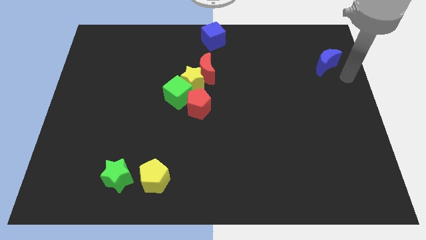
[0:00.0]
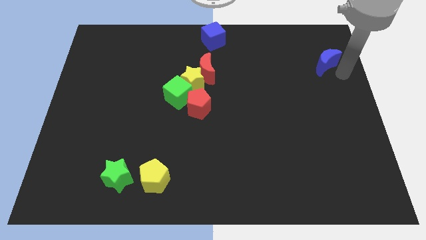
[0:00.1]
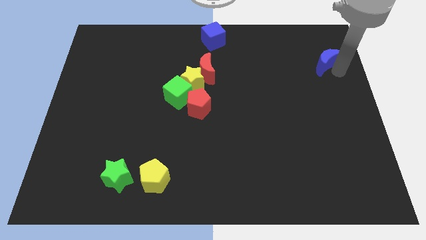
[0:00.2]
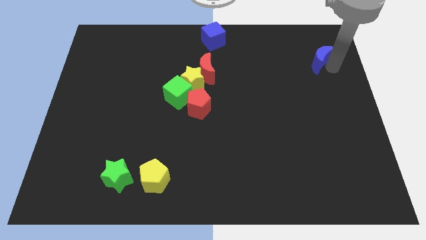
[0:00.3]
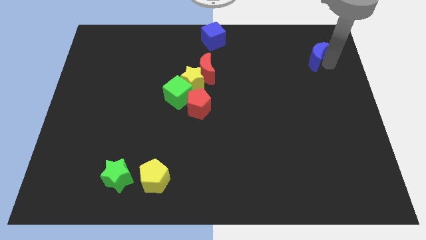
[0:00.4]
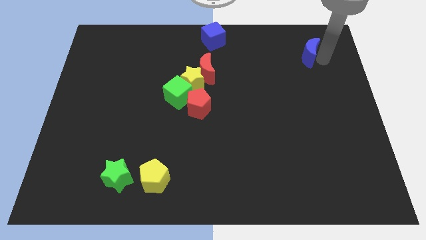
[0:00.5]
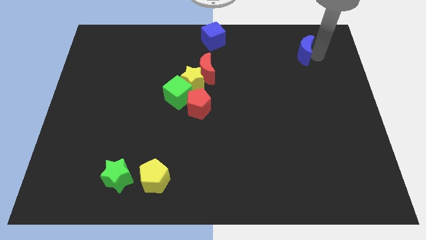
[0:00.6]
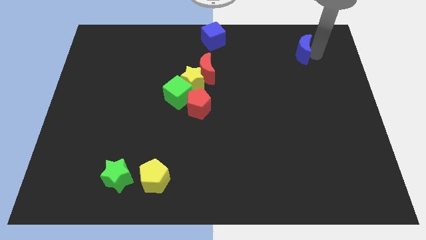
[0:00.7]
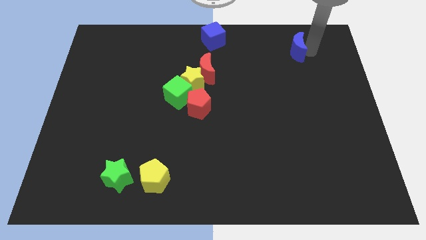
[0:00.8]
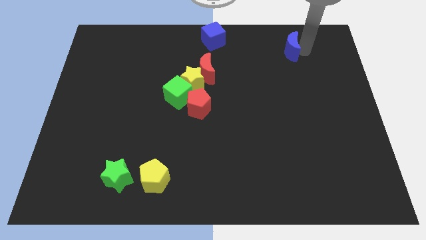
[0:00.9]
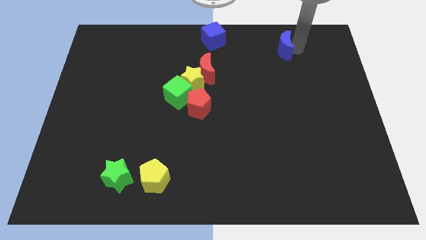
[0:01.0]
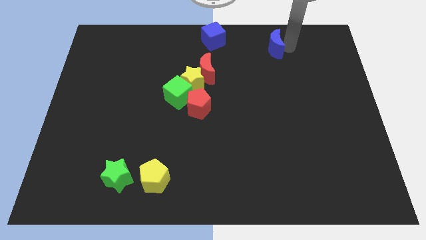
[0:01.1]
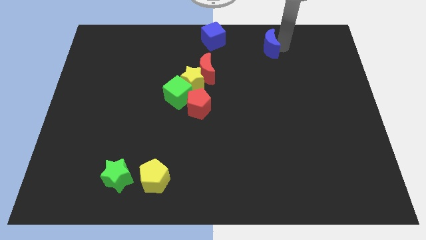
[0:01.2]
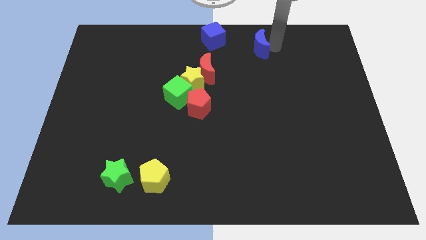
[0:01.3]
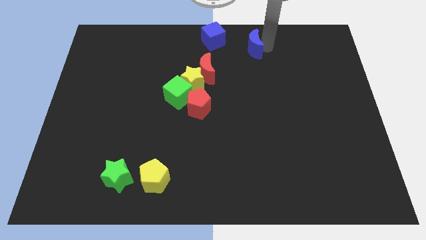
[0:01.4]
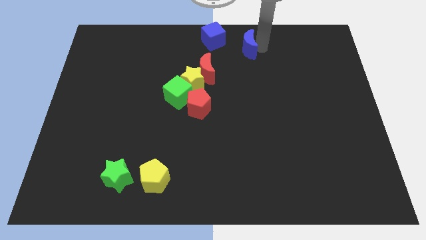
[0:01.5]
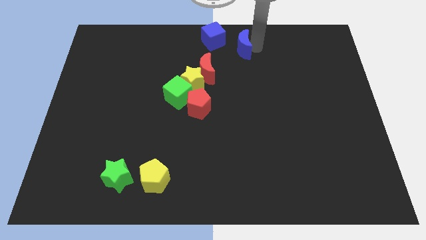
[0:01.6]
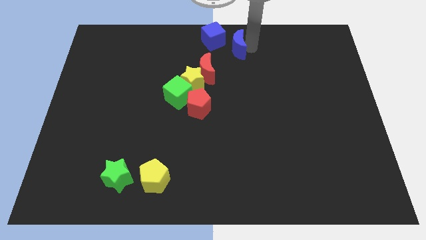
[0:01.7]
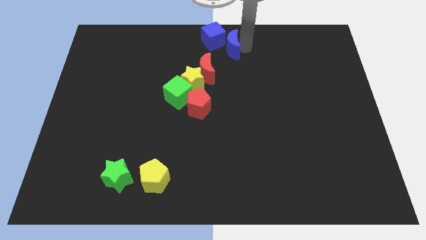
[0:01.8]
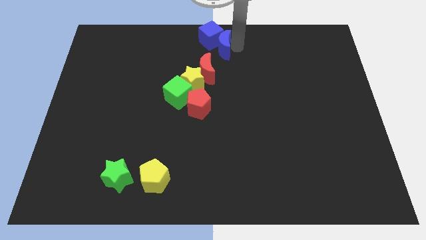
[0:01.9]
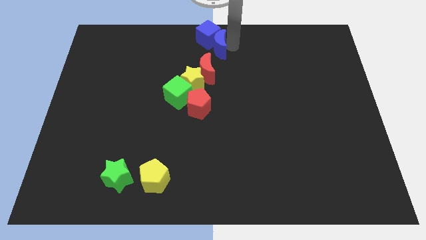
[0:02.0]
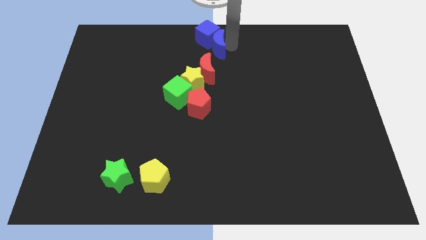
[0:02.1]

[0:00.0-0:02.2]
move blue crescent into blue cube

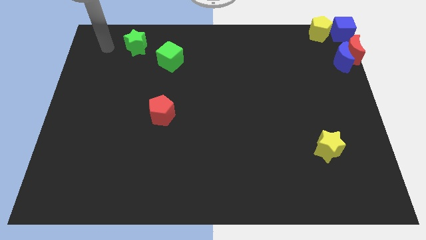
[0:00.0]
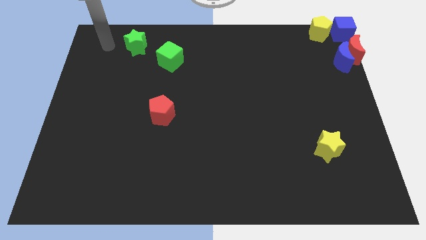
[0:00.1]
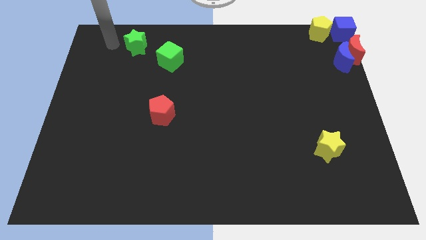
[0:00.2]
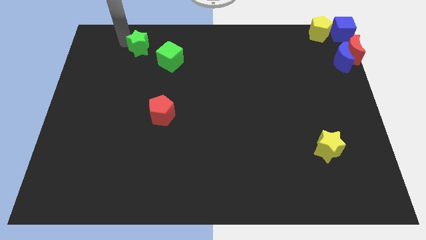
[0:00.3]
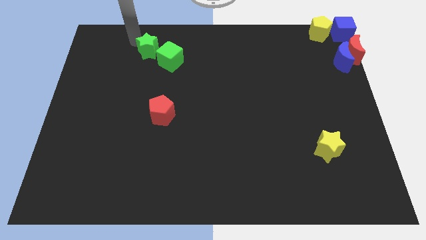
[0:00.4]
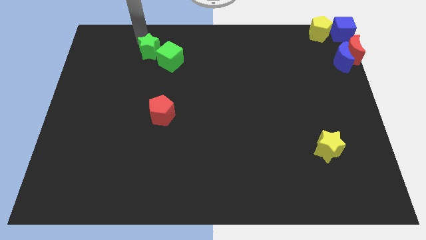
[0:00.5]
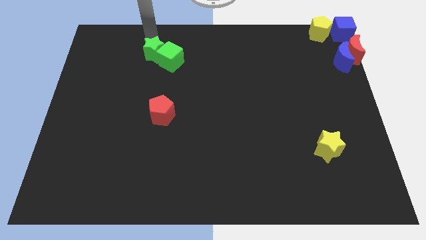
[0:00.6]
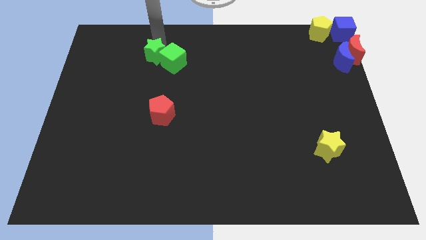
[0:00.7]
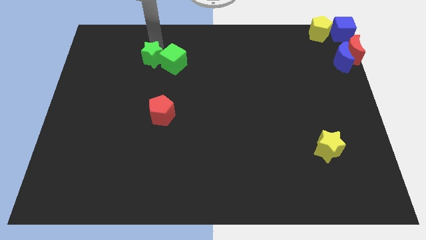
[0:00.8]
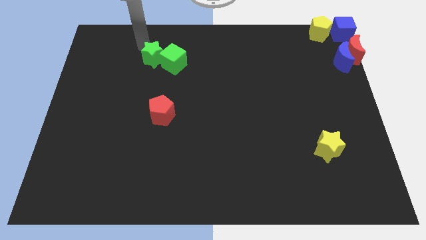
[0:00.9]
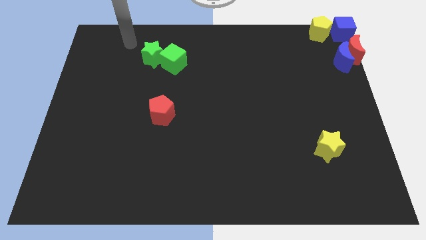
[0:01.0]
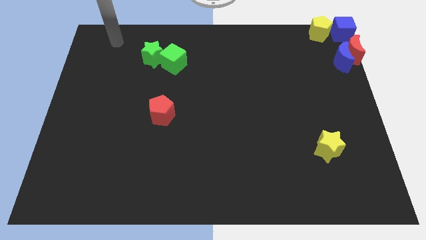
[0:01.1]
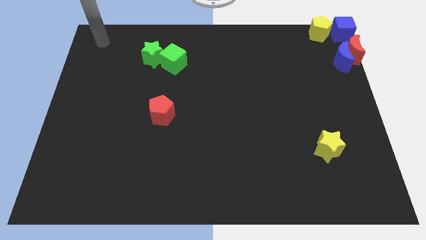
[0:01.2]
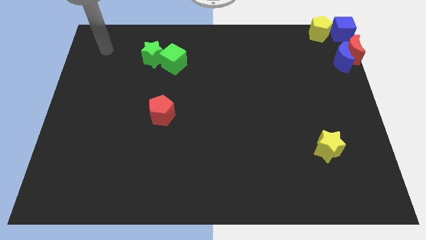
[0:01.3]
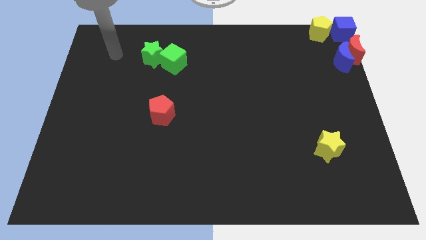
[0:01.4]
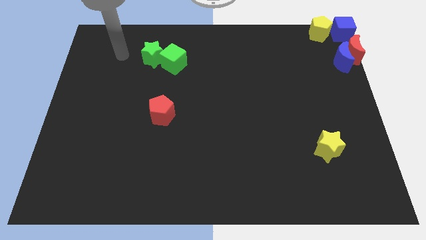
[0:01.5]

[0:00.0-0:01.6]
move the green star into the green cube

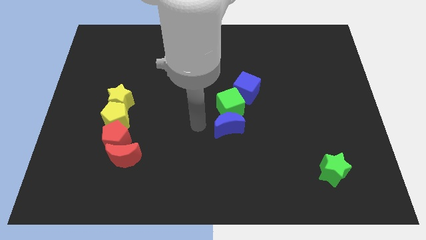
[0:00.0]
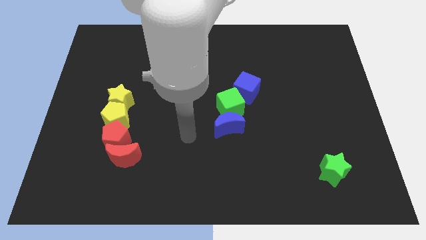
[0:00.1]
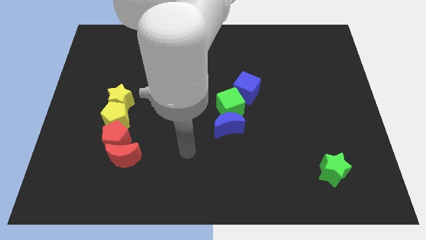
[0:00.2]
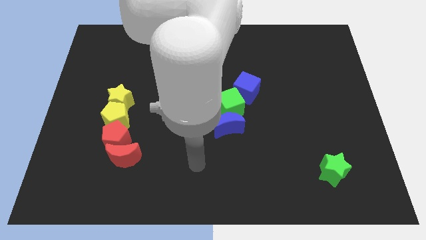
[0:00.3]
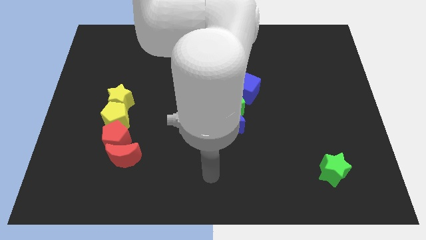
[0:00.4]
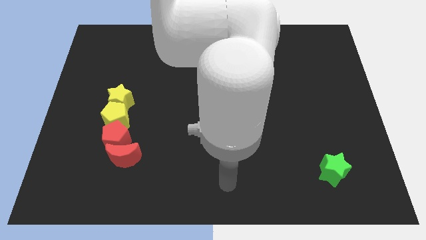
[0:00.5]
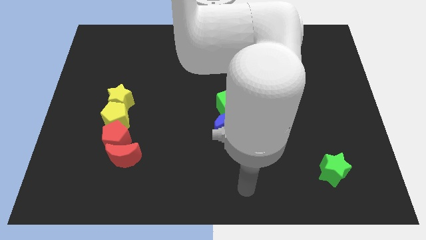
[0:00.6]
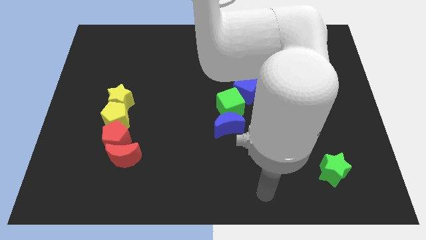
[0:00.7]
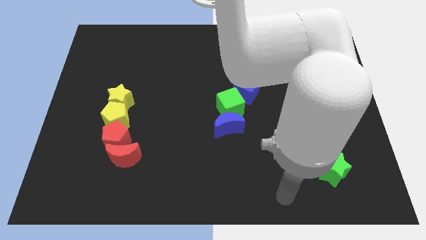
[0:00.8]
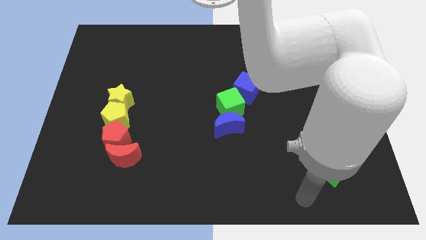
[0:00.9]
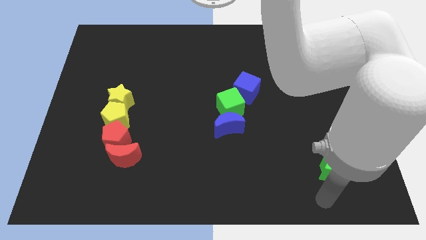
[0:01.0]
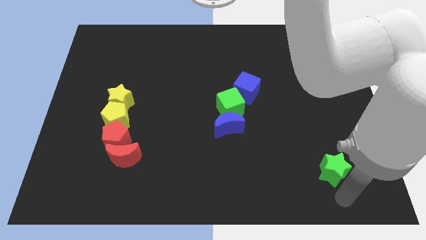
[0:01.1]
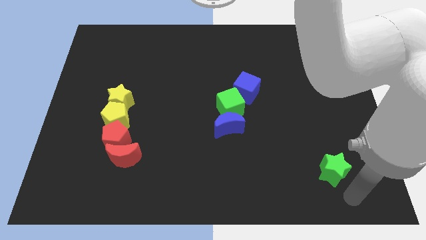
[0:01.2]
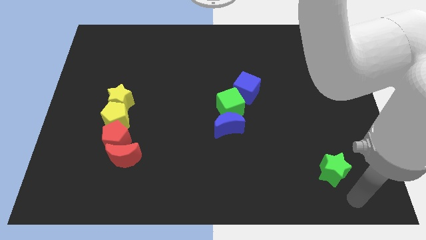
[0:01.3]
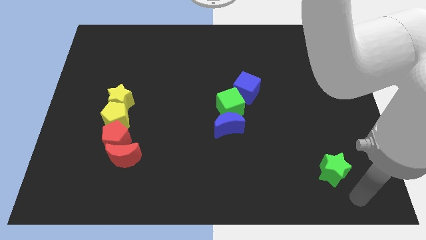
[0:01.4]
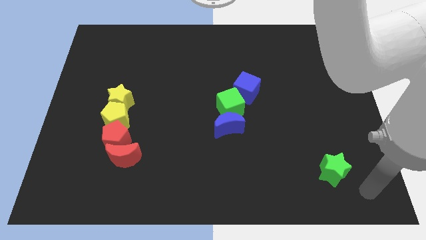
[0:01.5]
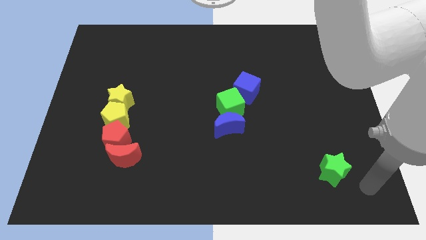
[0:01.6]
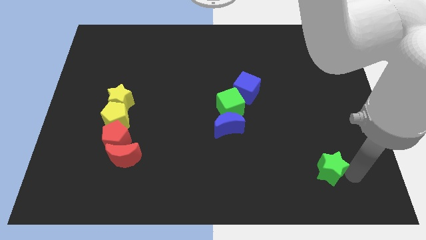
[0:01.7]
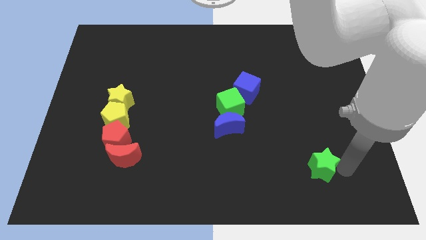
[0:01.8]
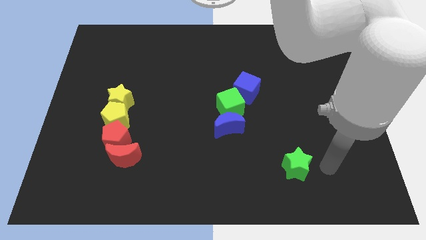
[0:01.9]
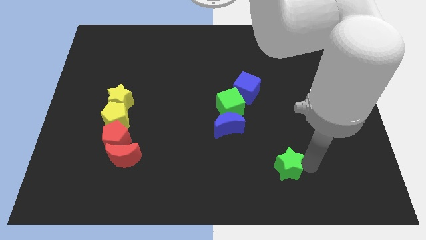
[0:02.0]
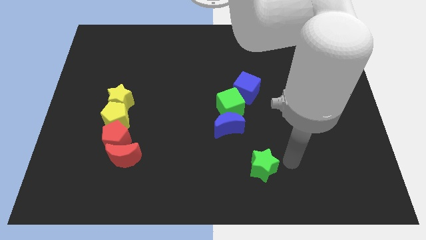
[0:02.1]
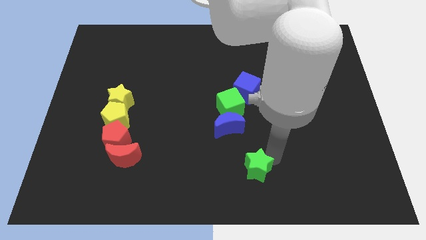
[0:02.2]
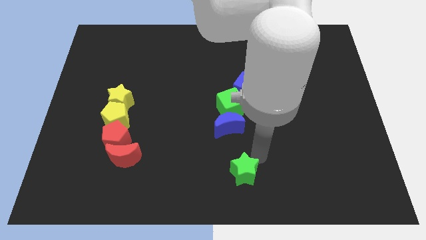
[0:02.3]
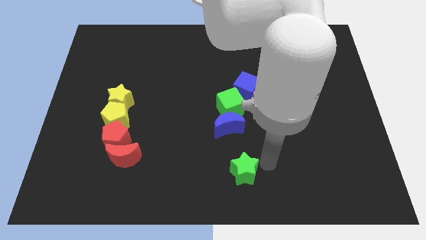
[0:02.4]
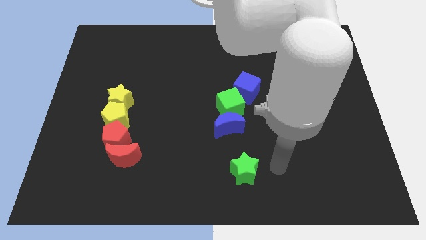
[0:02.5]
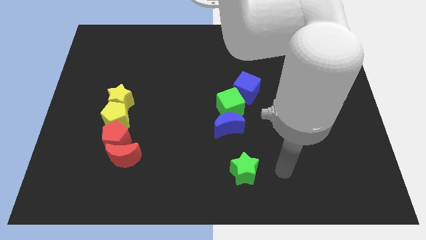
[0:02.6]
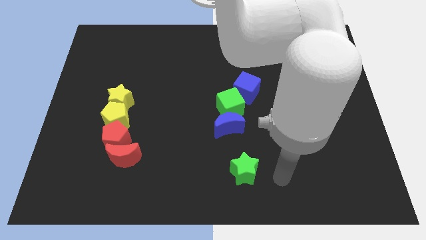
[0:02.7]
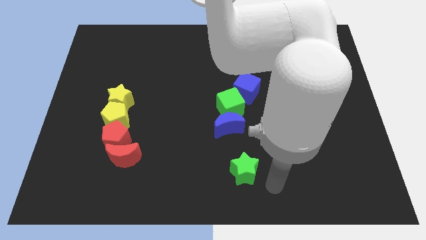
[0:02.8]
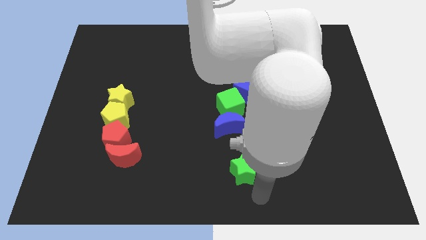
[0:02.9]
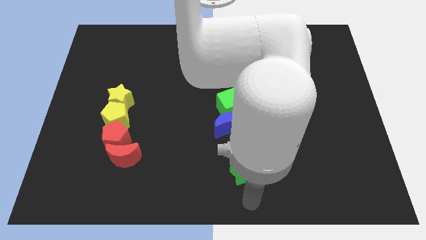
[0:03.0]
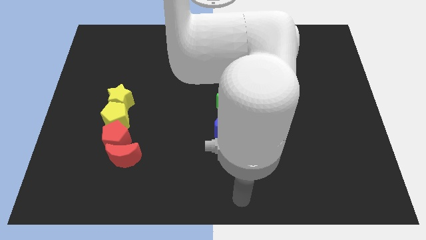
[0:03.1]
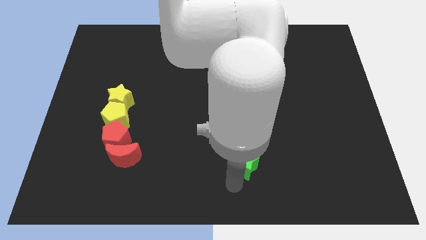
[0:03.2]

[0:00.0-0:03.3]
push the green star towards the left side of the board

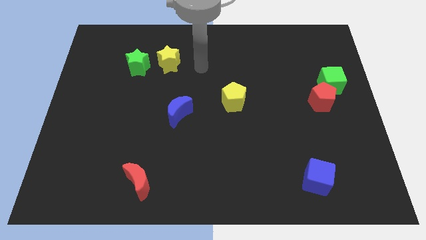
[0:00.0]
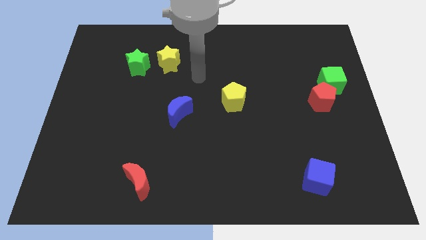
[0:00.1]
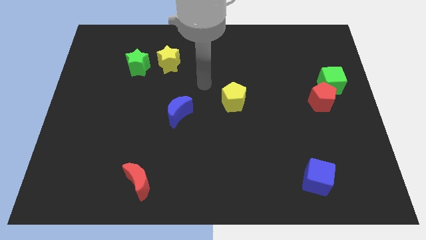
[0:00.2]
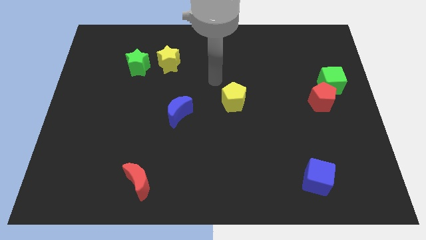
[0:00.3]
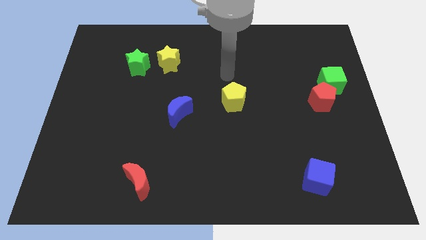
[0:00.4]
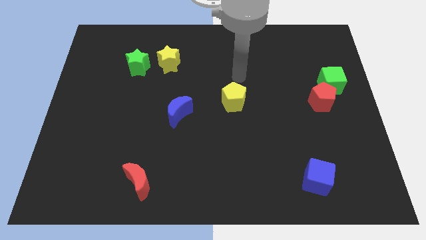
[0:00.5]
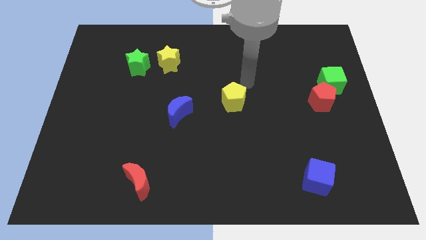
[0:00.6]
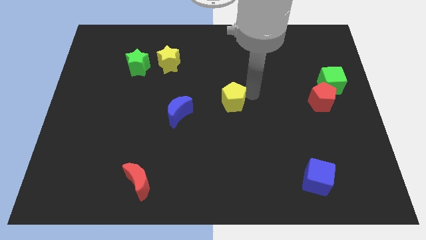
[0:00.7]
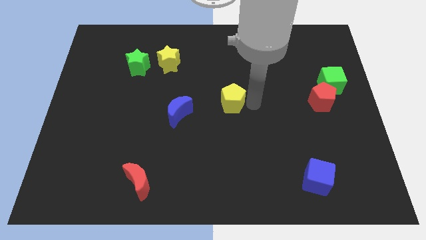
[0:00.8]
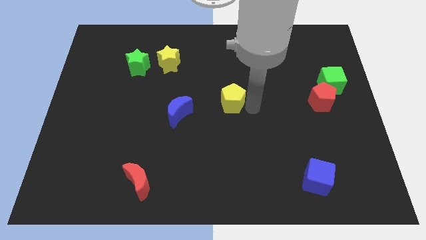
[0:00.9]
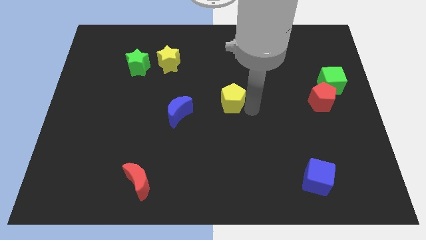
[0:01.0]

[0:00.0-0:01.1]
point the arm to the right of the yellow pentagon

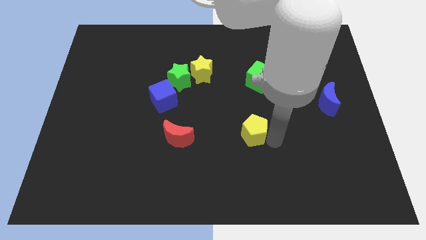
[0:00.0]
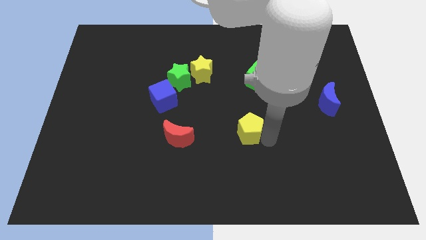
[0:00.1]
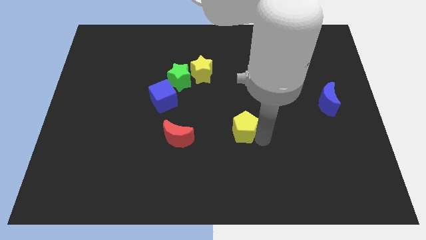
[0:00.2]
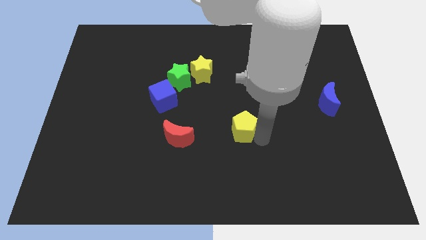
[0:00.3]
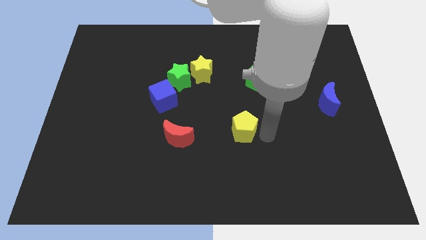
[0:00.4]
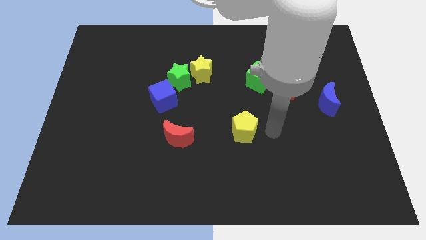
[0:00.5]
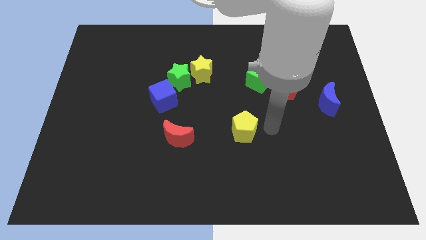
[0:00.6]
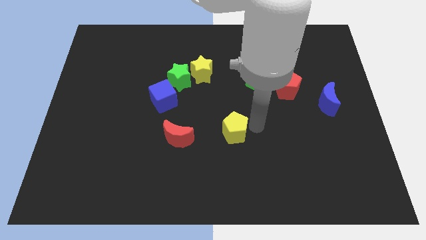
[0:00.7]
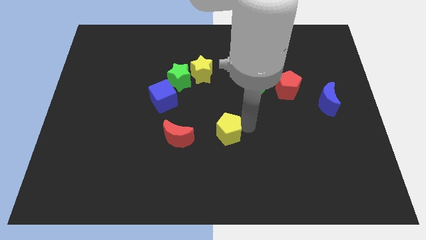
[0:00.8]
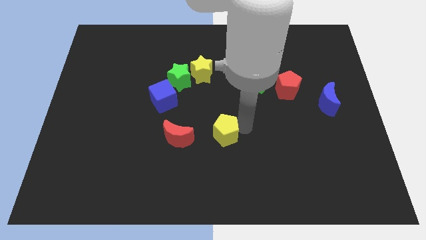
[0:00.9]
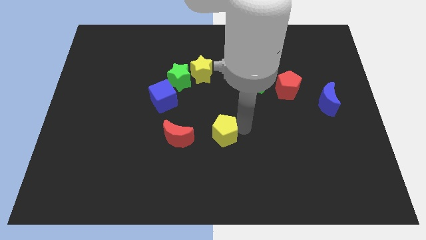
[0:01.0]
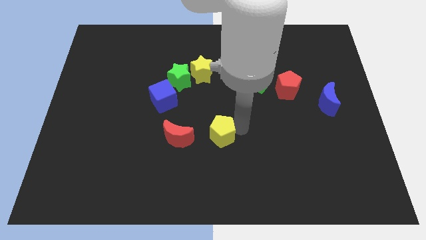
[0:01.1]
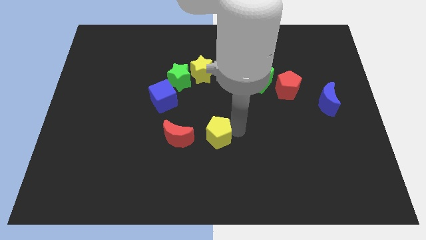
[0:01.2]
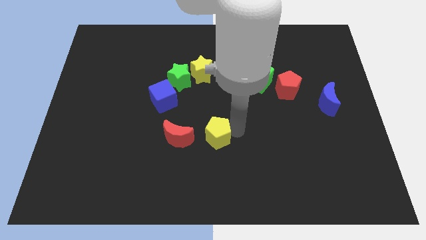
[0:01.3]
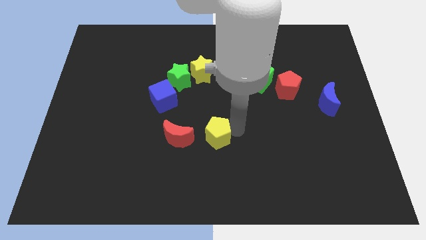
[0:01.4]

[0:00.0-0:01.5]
move yellow pentagon close to red moon
